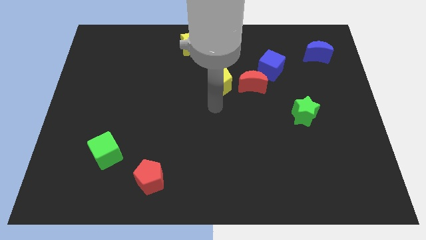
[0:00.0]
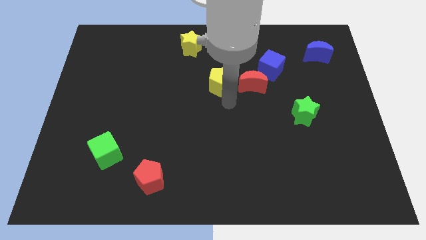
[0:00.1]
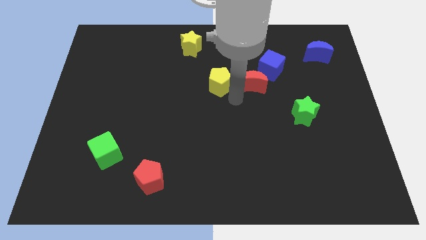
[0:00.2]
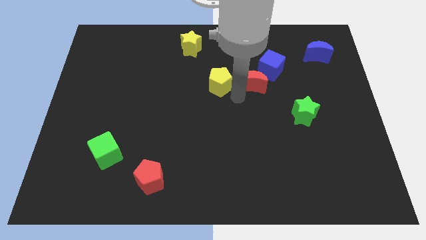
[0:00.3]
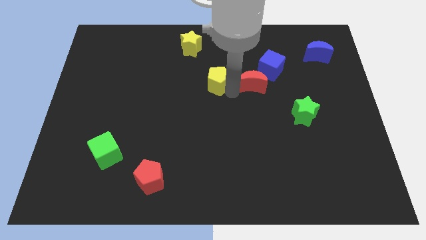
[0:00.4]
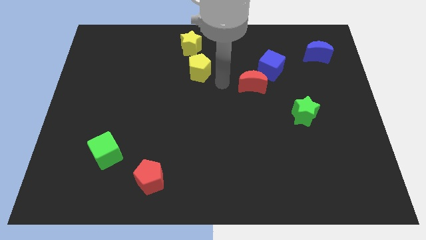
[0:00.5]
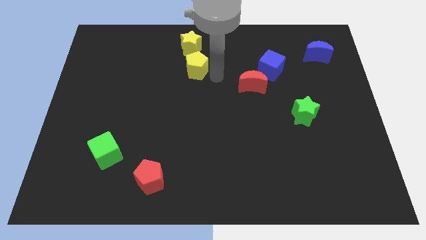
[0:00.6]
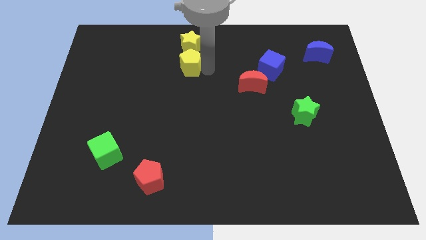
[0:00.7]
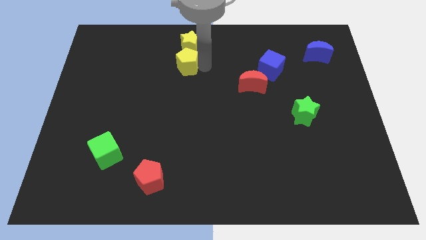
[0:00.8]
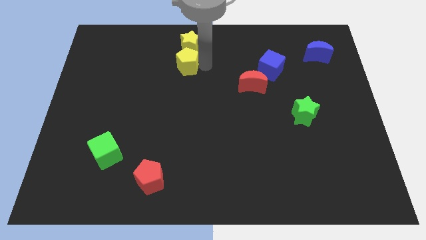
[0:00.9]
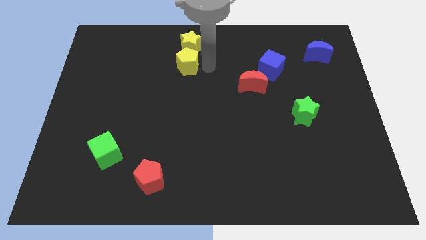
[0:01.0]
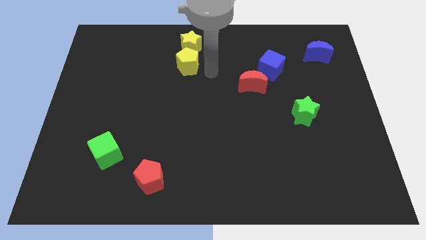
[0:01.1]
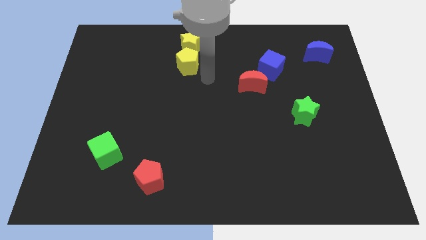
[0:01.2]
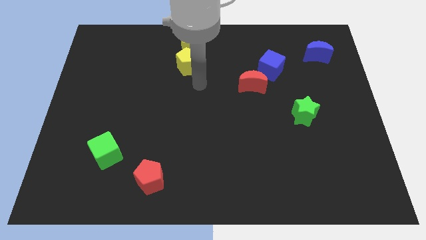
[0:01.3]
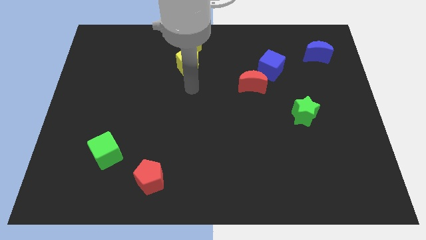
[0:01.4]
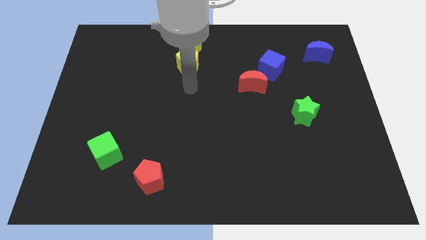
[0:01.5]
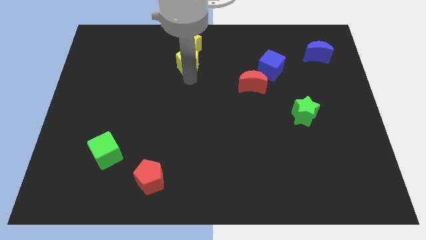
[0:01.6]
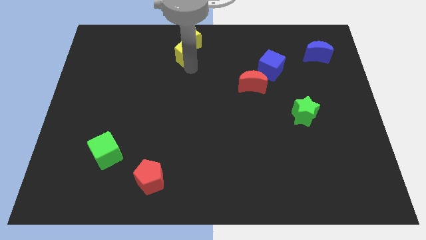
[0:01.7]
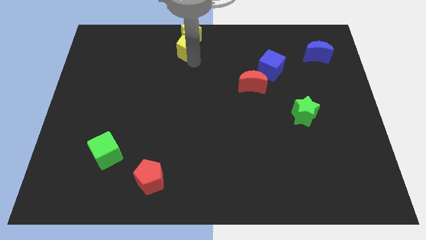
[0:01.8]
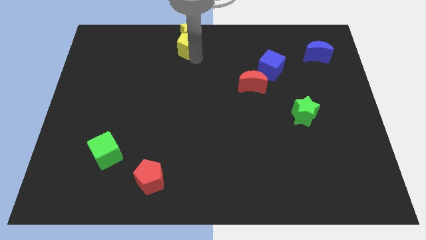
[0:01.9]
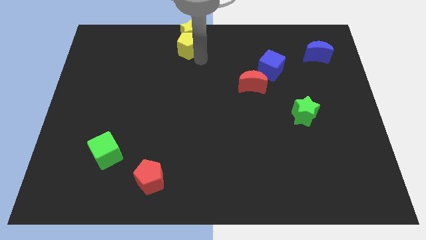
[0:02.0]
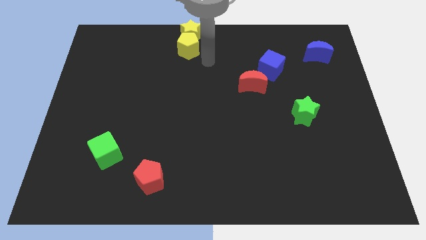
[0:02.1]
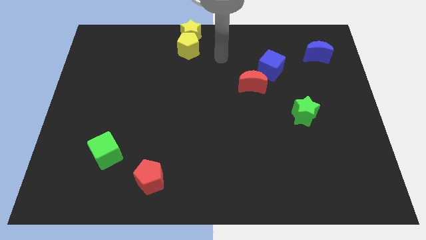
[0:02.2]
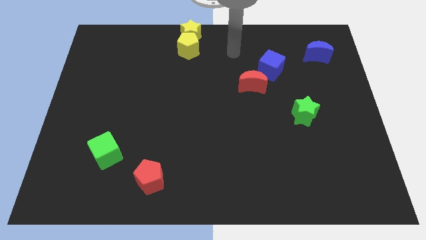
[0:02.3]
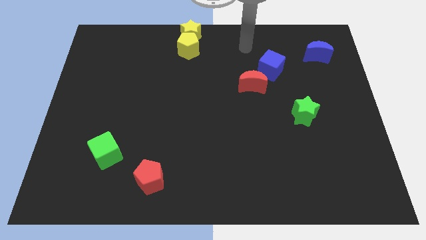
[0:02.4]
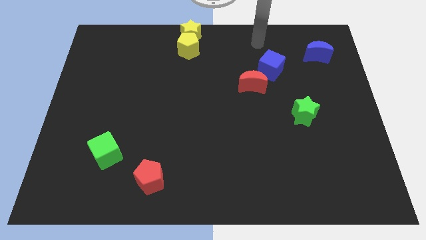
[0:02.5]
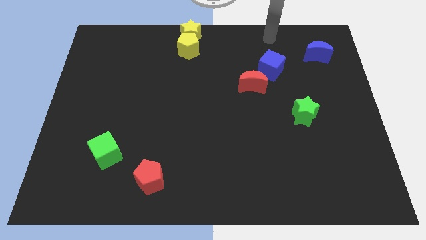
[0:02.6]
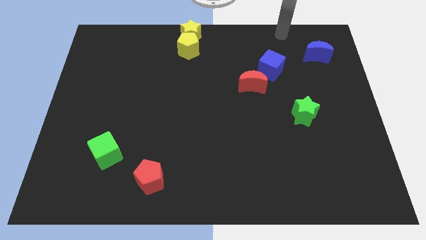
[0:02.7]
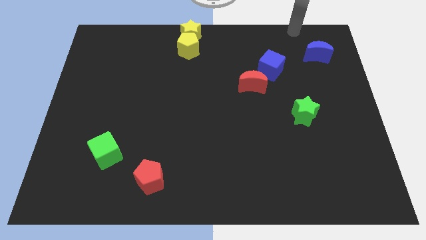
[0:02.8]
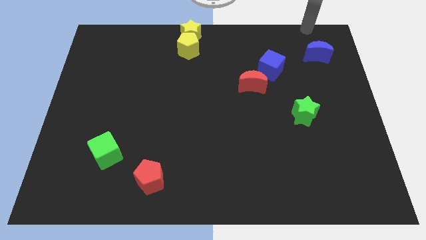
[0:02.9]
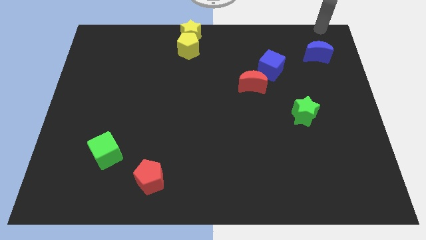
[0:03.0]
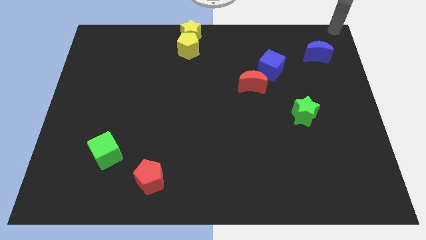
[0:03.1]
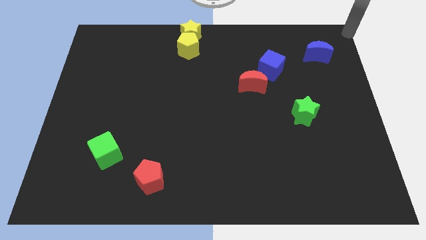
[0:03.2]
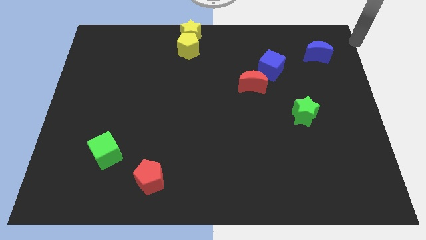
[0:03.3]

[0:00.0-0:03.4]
move yellow pentagon into yellow star

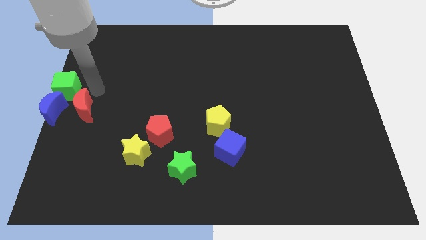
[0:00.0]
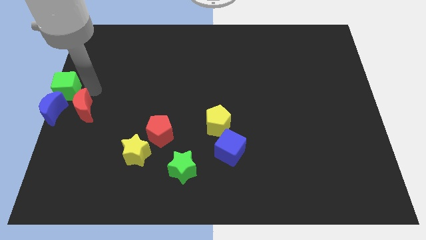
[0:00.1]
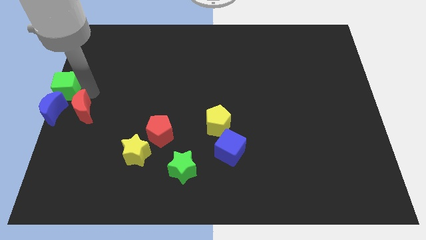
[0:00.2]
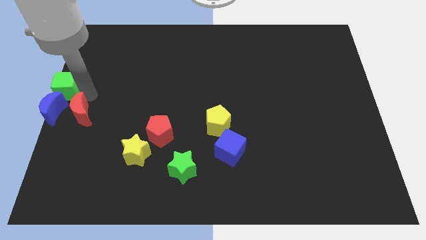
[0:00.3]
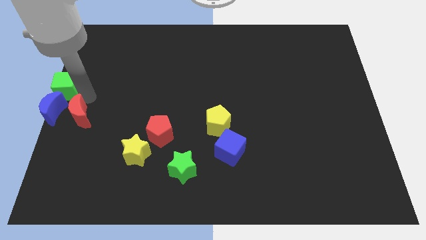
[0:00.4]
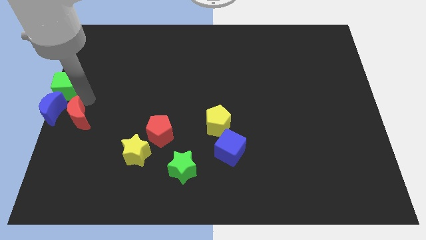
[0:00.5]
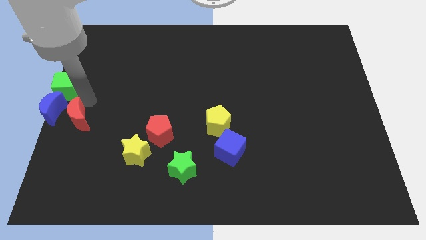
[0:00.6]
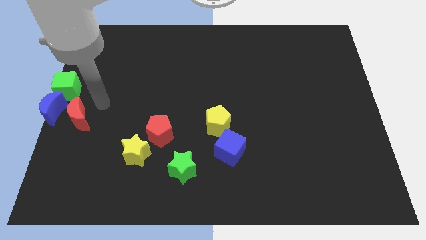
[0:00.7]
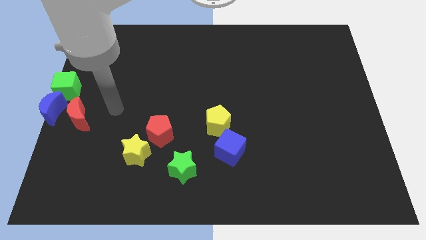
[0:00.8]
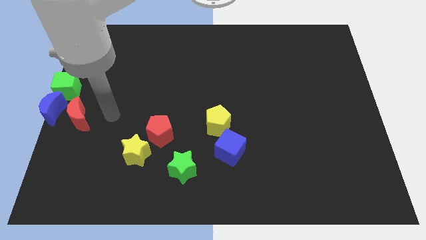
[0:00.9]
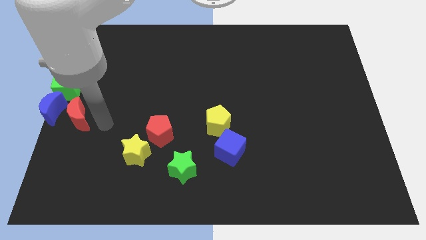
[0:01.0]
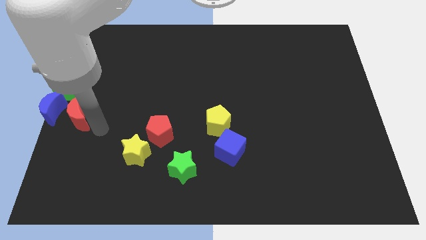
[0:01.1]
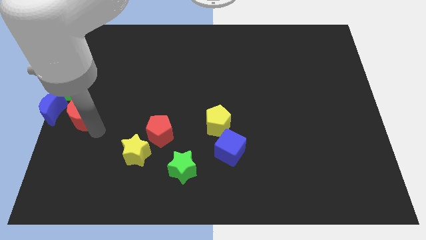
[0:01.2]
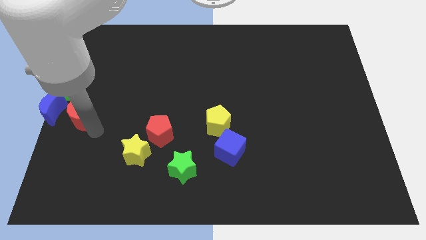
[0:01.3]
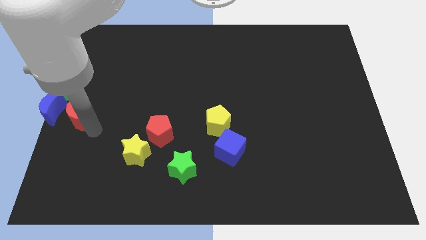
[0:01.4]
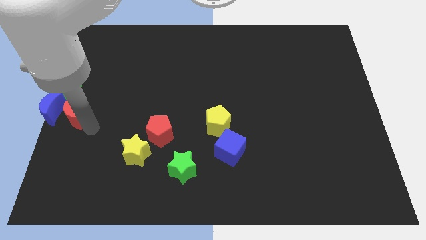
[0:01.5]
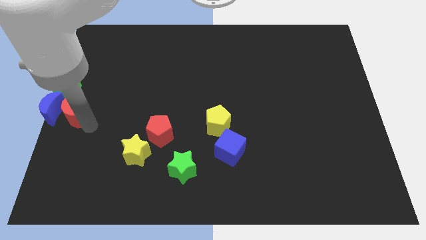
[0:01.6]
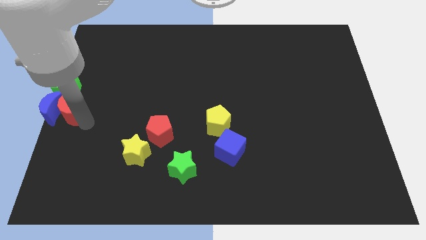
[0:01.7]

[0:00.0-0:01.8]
move the red moon into the blue moon

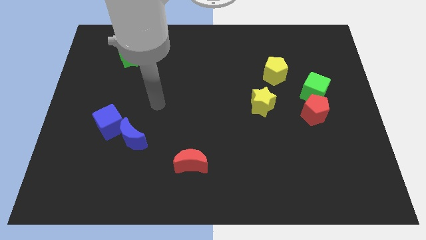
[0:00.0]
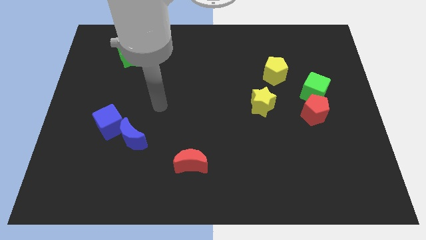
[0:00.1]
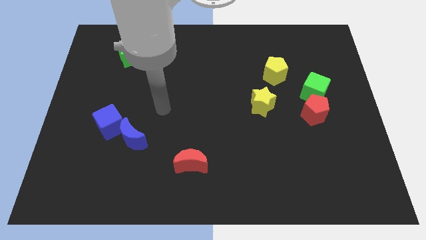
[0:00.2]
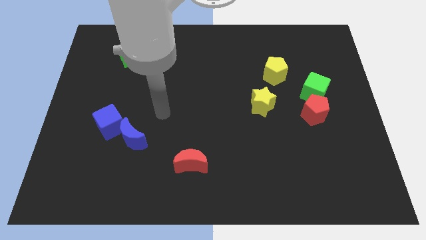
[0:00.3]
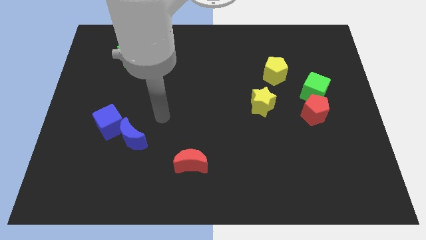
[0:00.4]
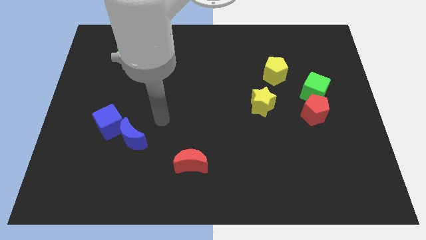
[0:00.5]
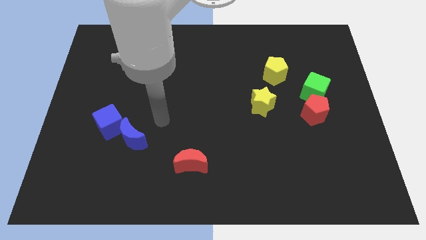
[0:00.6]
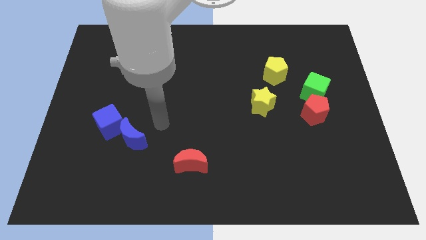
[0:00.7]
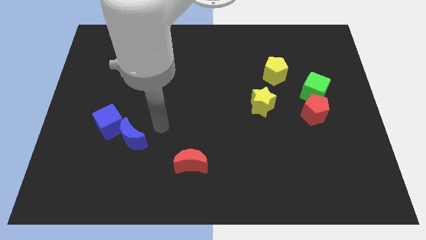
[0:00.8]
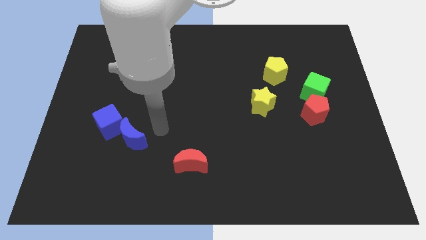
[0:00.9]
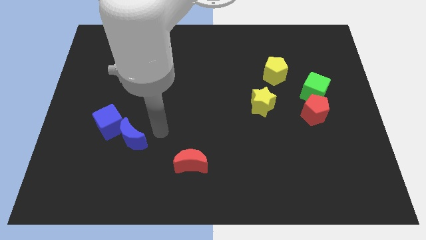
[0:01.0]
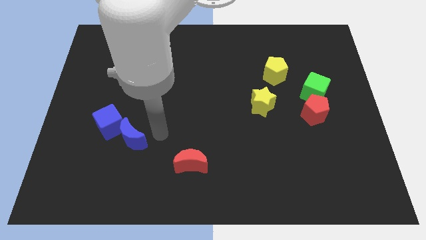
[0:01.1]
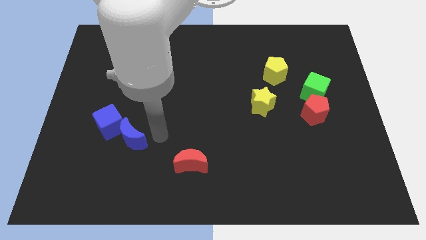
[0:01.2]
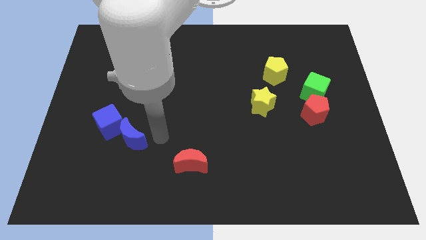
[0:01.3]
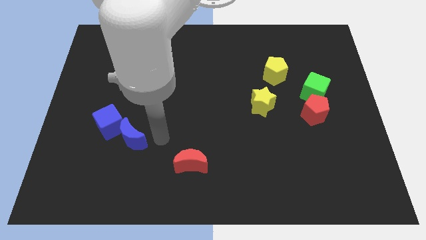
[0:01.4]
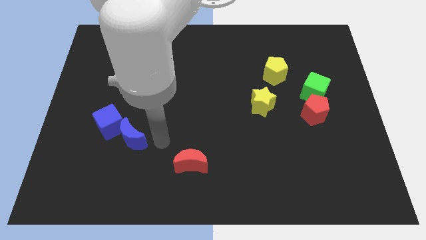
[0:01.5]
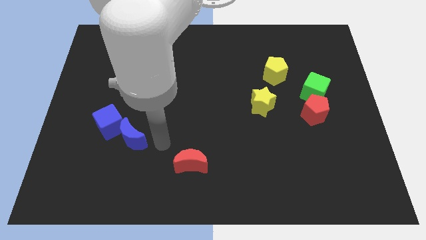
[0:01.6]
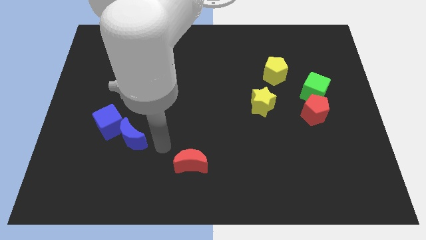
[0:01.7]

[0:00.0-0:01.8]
place your hand to the right of the blue moon

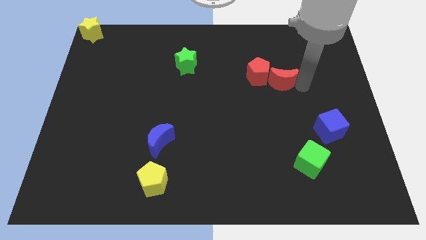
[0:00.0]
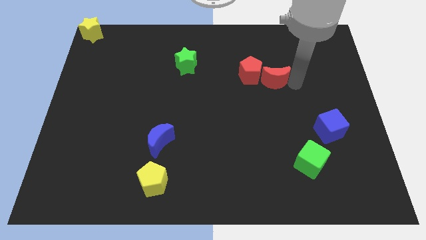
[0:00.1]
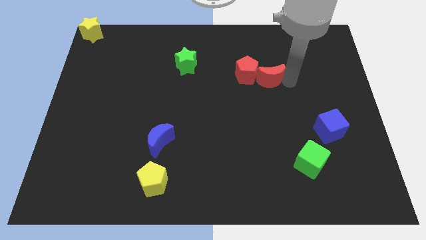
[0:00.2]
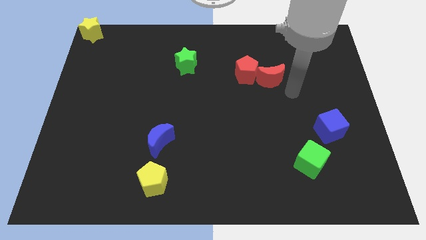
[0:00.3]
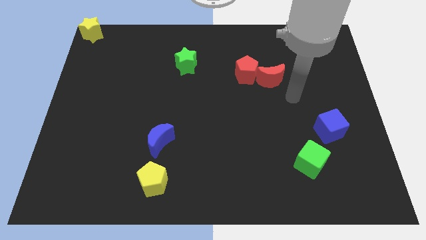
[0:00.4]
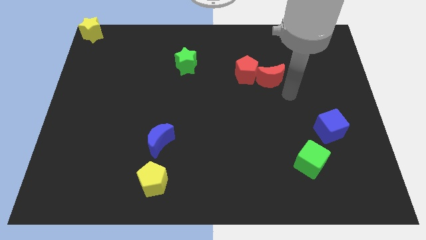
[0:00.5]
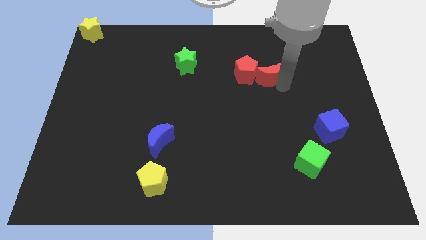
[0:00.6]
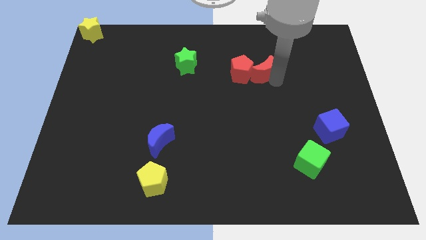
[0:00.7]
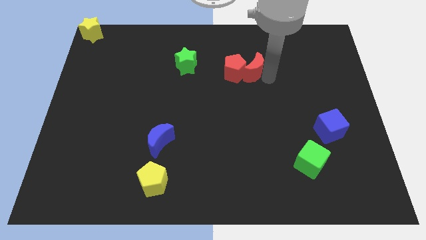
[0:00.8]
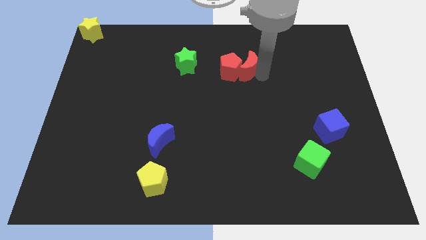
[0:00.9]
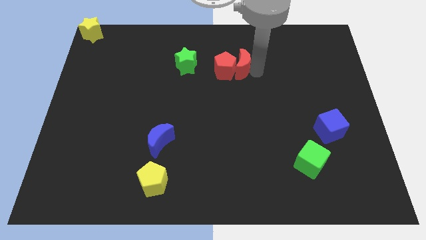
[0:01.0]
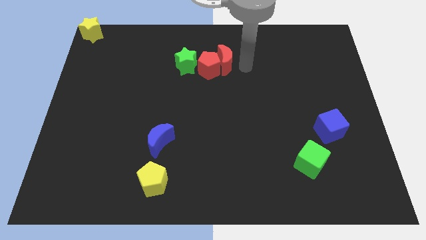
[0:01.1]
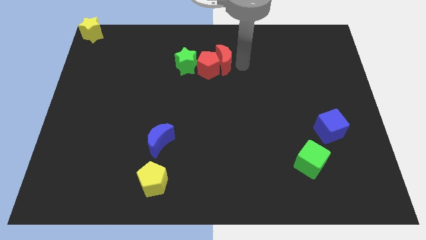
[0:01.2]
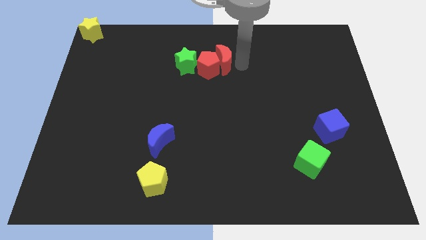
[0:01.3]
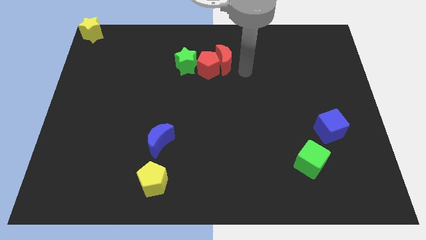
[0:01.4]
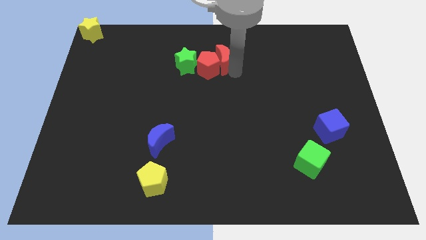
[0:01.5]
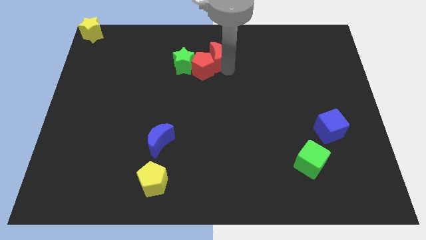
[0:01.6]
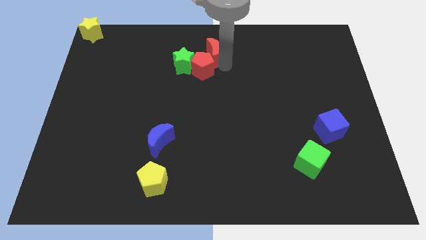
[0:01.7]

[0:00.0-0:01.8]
push the group of red blocks into green star

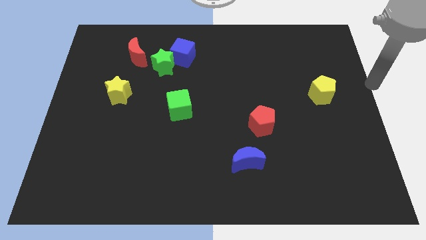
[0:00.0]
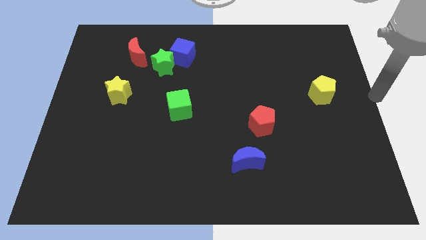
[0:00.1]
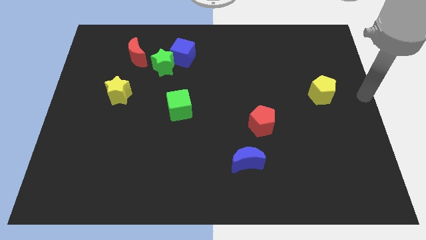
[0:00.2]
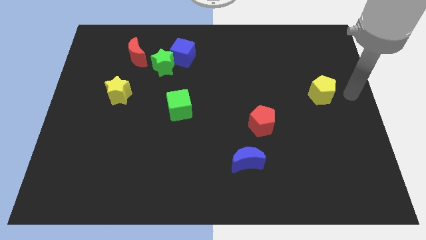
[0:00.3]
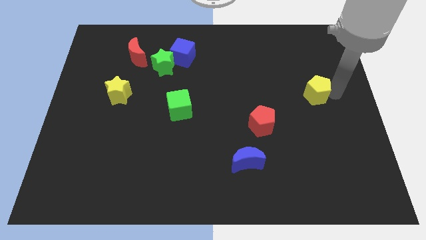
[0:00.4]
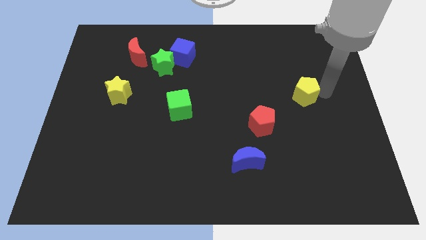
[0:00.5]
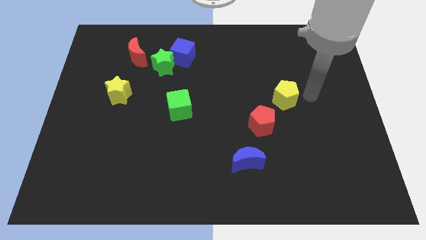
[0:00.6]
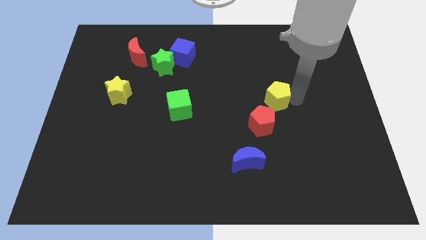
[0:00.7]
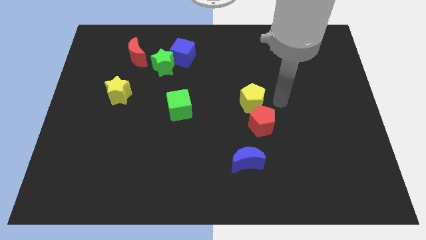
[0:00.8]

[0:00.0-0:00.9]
move yellow pentagon above red pentagon
